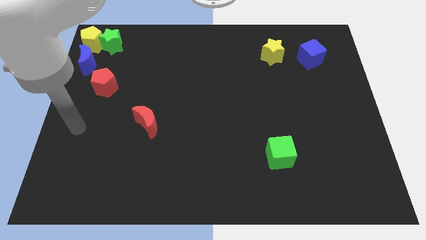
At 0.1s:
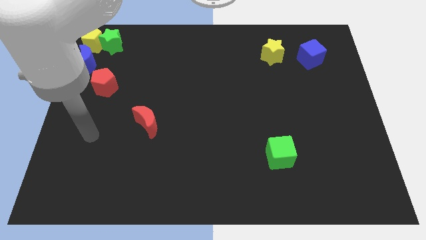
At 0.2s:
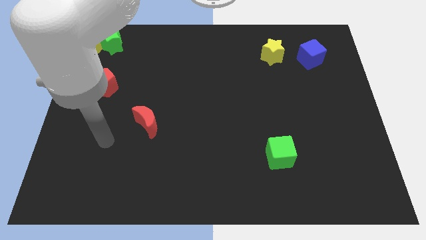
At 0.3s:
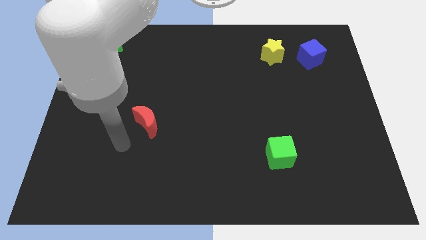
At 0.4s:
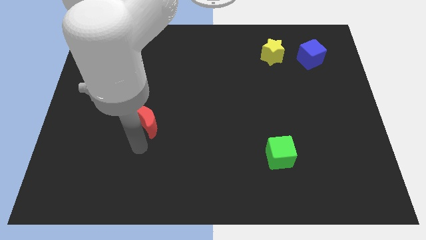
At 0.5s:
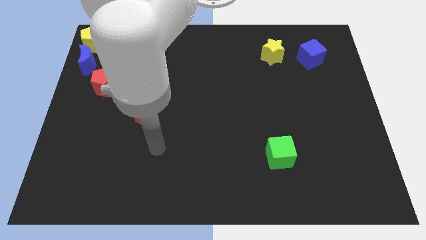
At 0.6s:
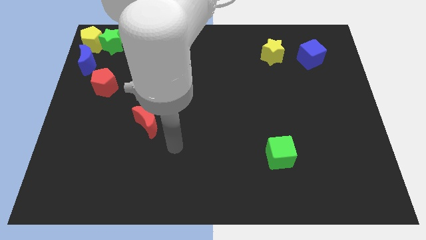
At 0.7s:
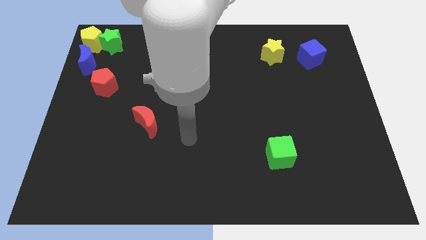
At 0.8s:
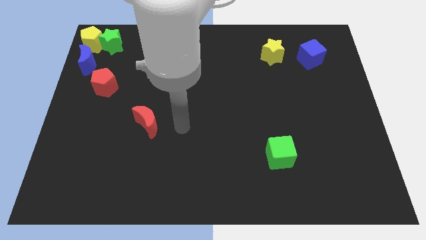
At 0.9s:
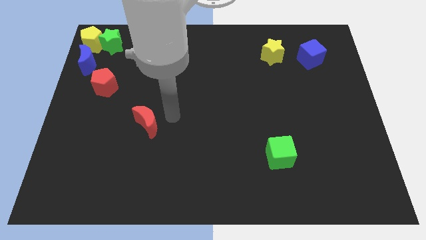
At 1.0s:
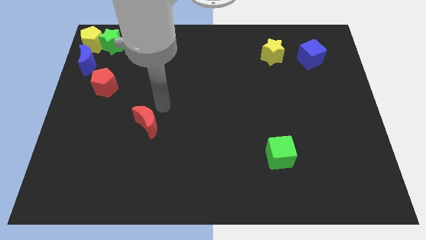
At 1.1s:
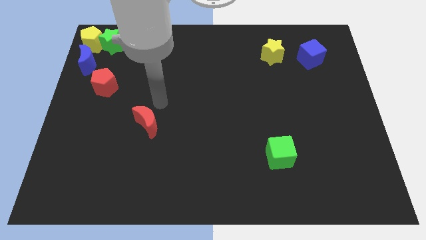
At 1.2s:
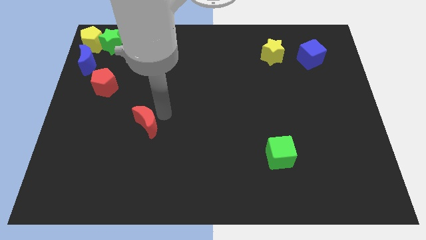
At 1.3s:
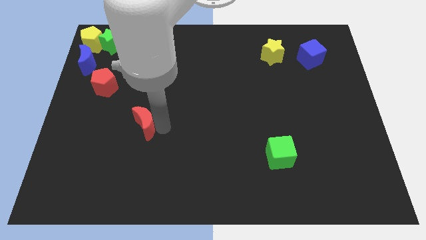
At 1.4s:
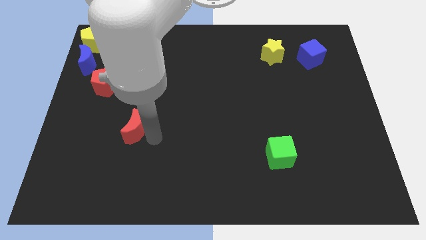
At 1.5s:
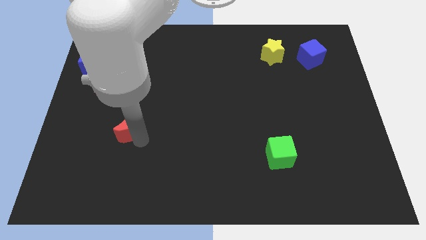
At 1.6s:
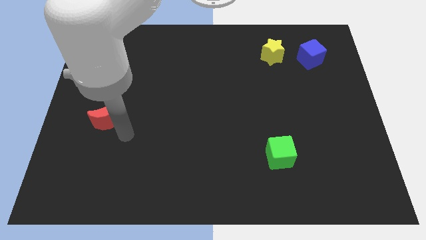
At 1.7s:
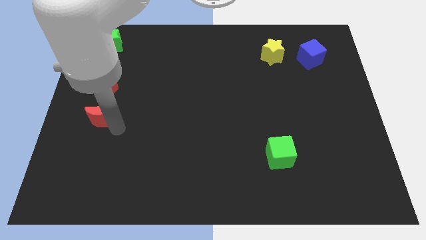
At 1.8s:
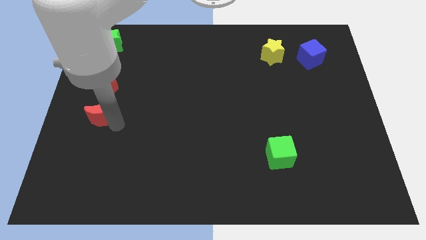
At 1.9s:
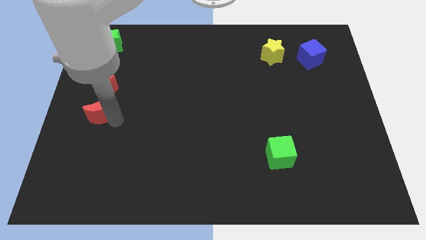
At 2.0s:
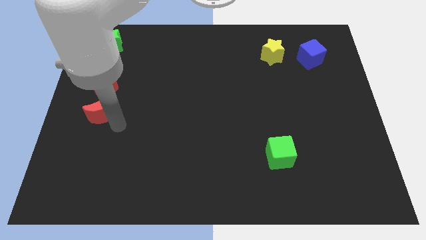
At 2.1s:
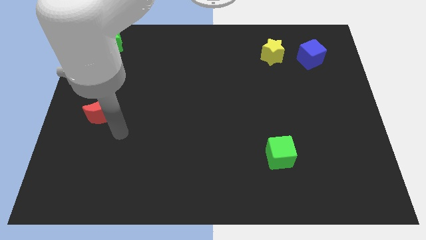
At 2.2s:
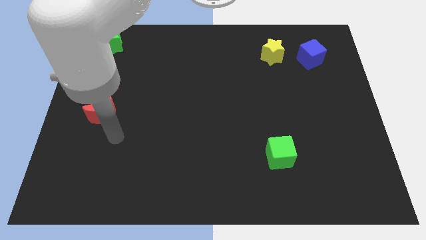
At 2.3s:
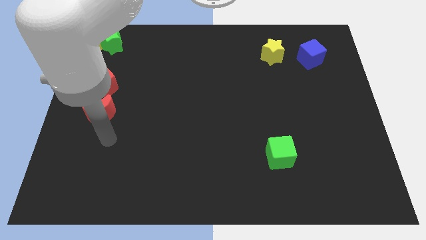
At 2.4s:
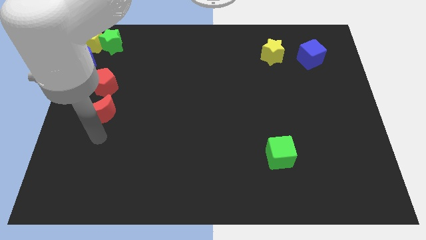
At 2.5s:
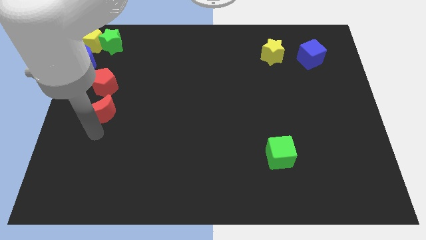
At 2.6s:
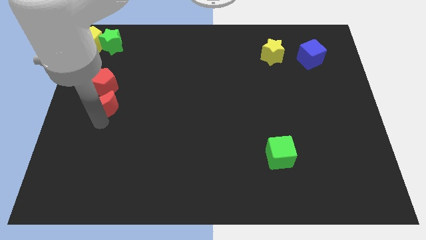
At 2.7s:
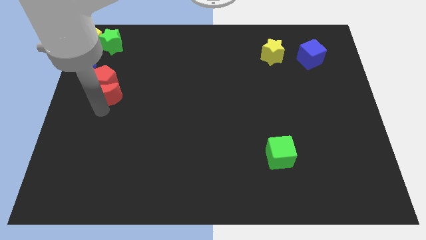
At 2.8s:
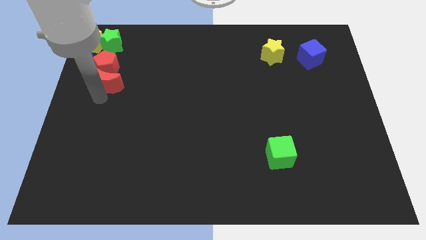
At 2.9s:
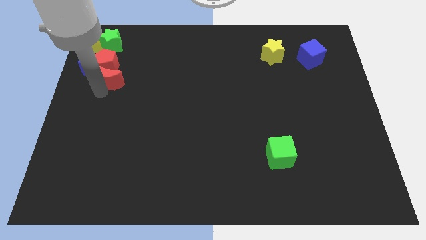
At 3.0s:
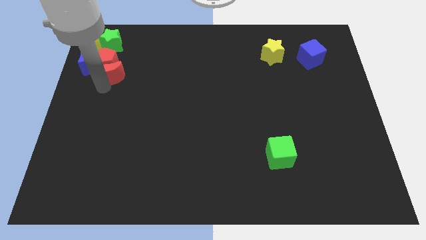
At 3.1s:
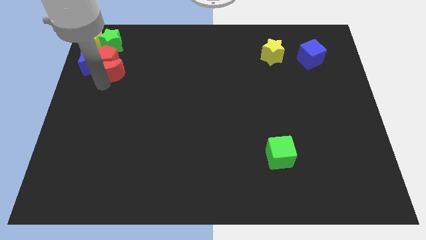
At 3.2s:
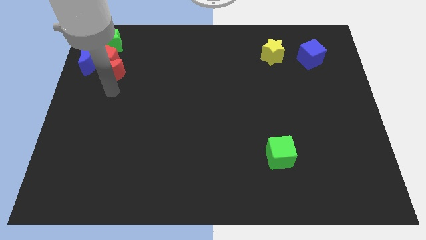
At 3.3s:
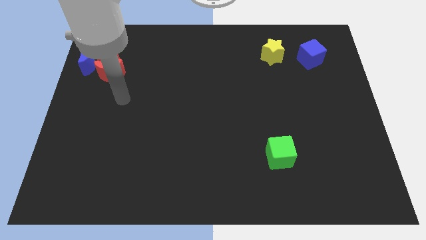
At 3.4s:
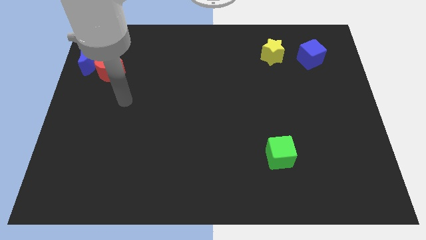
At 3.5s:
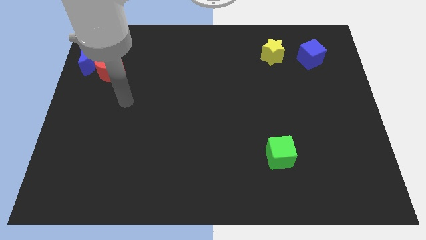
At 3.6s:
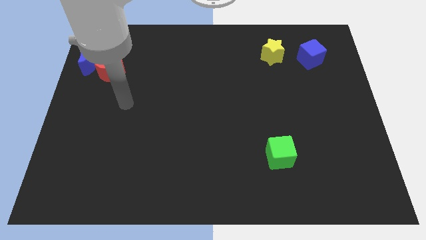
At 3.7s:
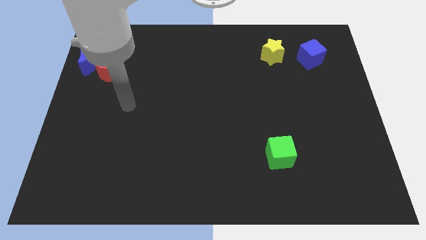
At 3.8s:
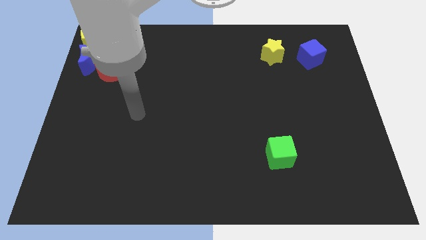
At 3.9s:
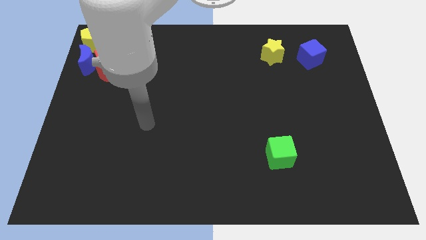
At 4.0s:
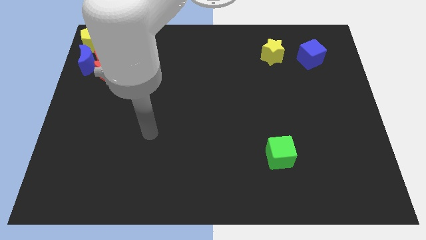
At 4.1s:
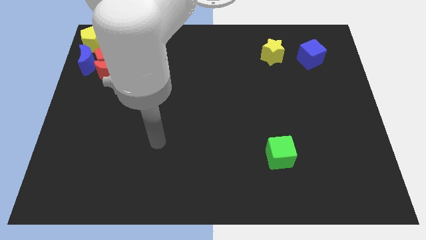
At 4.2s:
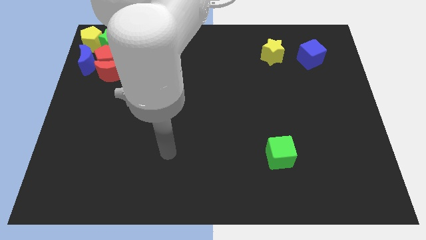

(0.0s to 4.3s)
push the red moon into the red pentagon

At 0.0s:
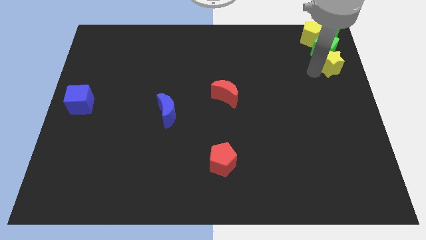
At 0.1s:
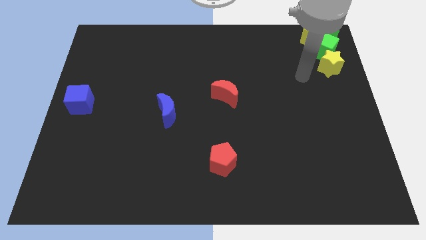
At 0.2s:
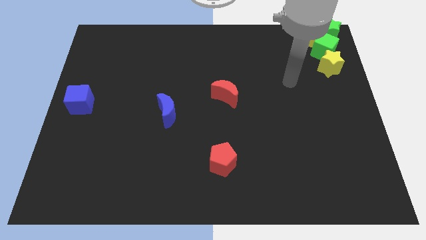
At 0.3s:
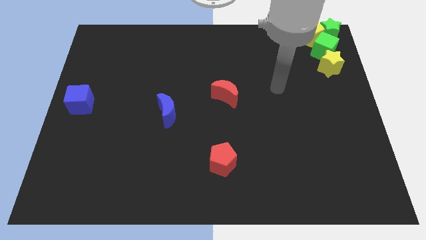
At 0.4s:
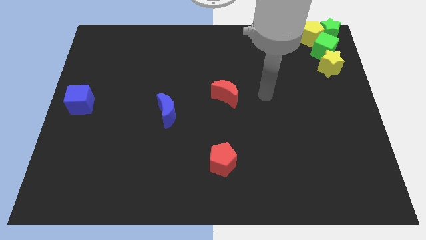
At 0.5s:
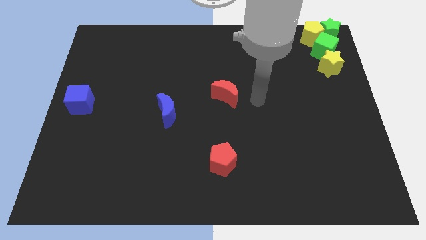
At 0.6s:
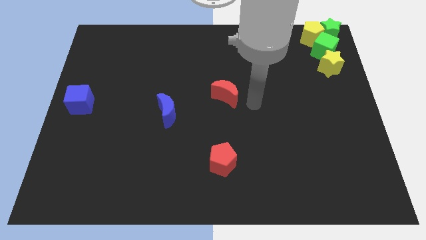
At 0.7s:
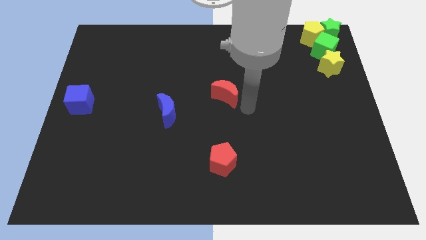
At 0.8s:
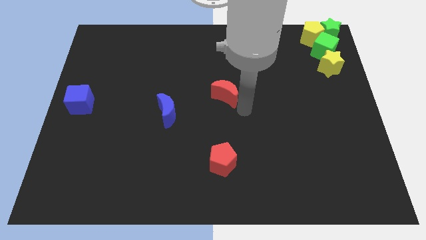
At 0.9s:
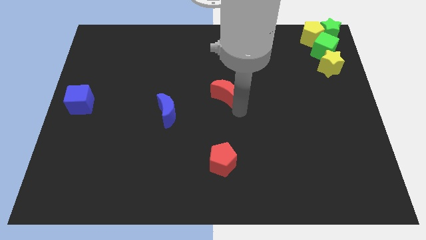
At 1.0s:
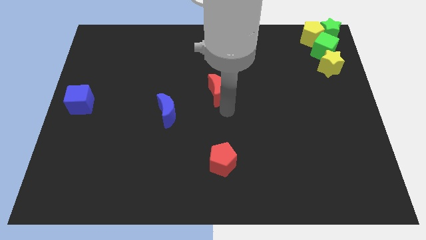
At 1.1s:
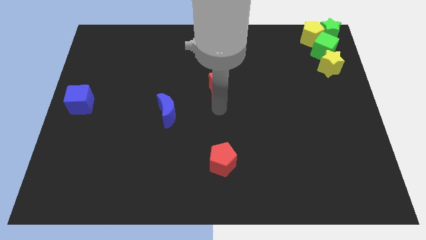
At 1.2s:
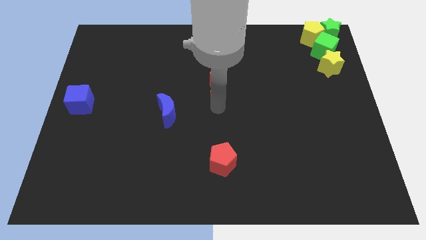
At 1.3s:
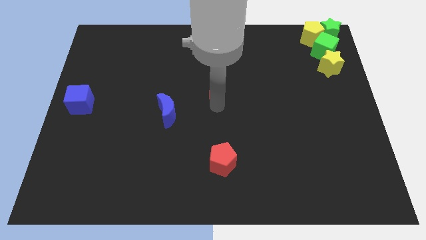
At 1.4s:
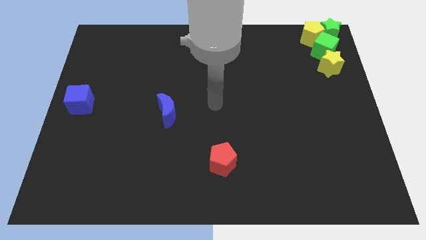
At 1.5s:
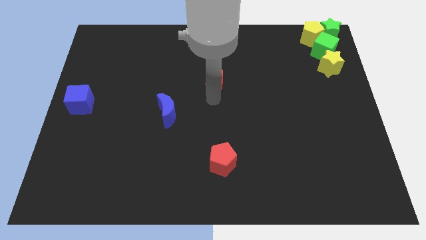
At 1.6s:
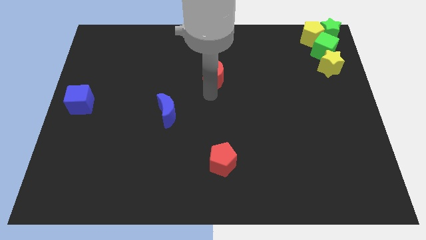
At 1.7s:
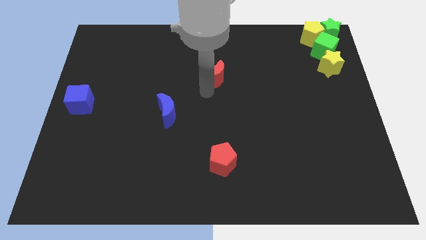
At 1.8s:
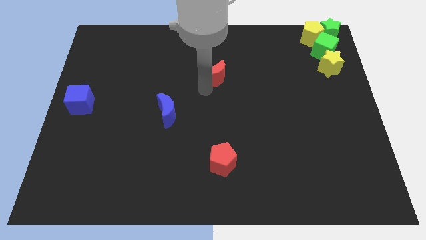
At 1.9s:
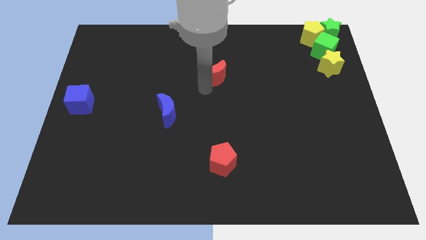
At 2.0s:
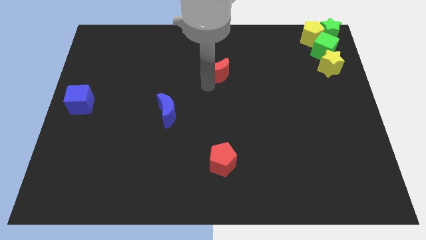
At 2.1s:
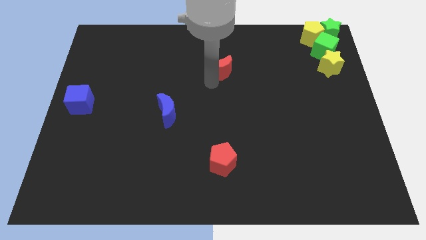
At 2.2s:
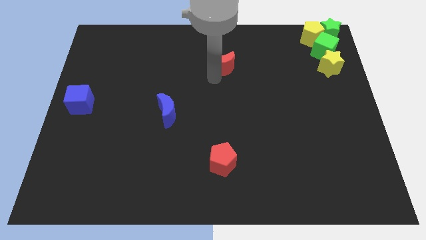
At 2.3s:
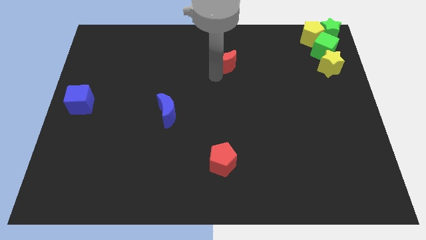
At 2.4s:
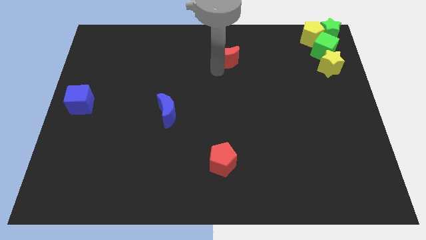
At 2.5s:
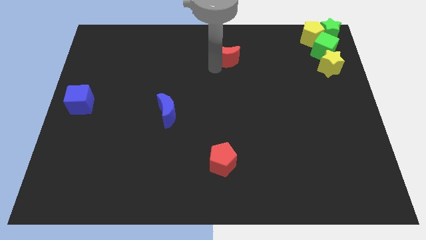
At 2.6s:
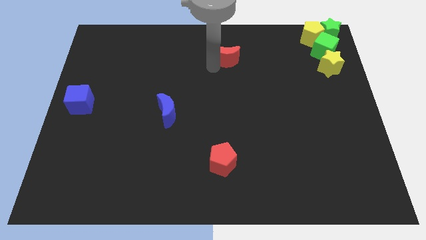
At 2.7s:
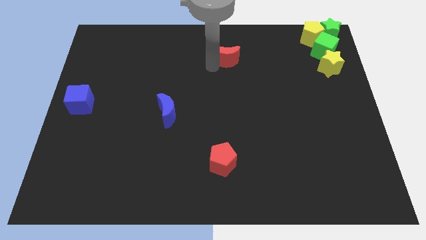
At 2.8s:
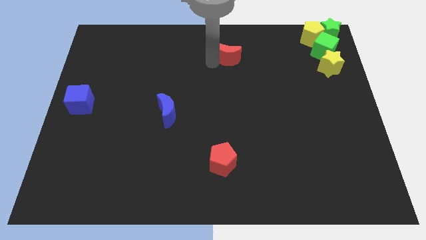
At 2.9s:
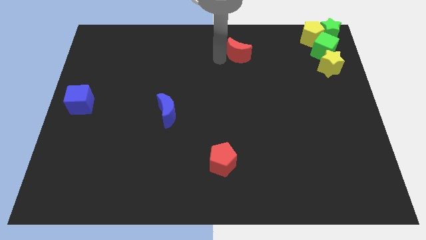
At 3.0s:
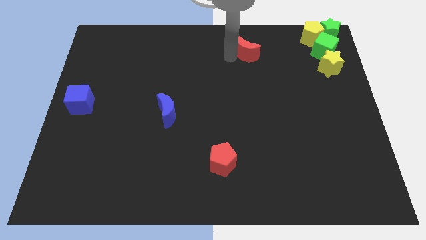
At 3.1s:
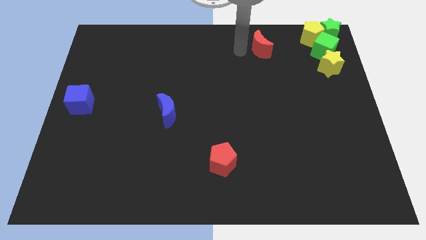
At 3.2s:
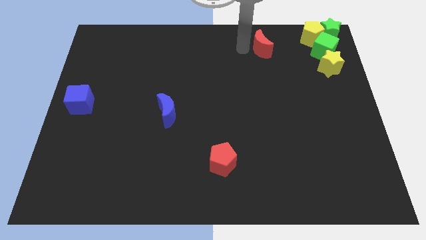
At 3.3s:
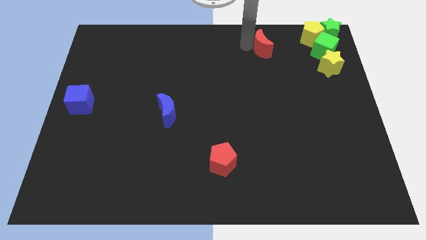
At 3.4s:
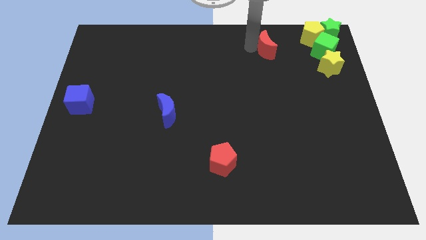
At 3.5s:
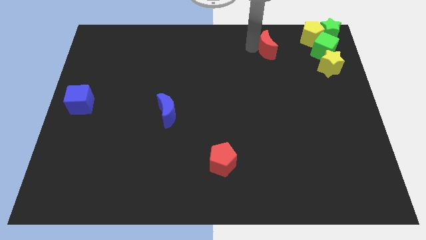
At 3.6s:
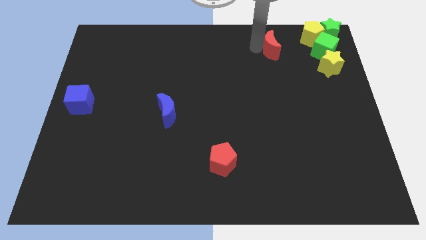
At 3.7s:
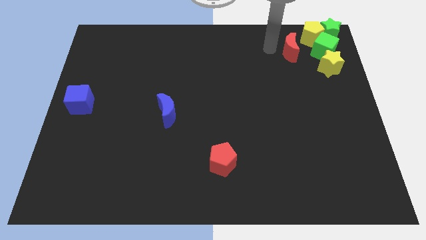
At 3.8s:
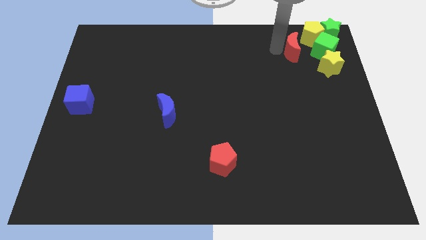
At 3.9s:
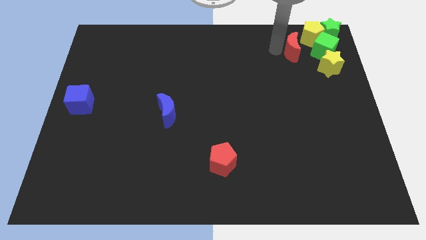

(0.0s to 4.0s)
place the red moon left to the green cube

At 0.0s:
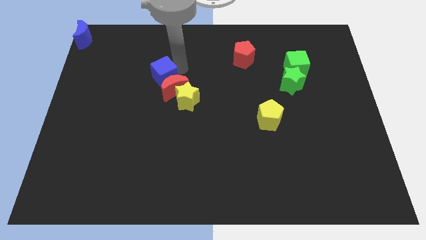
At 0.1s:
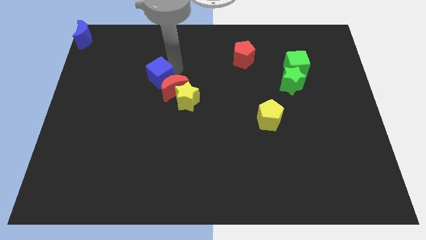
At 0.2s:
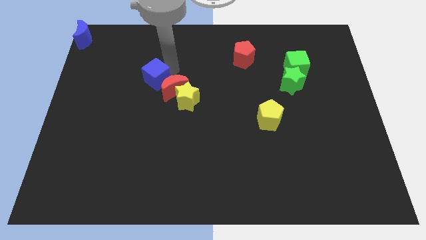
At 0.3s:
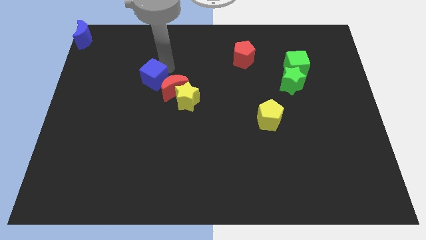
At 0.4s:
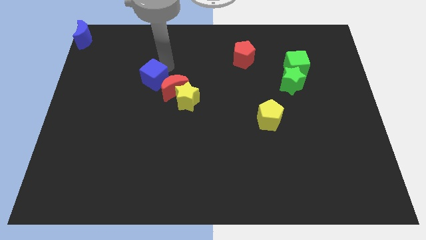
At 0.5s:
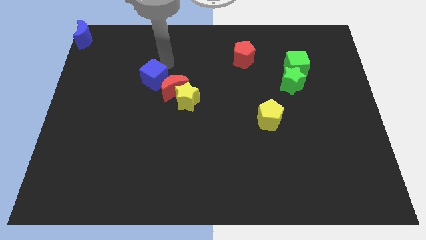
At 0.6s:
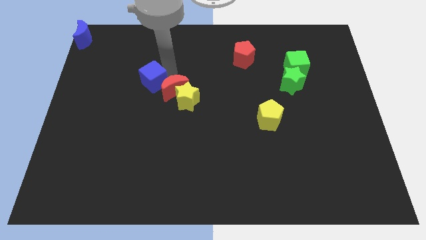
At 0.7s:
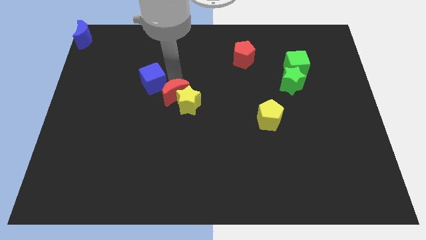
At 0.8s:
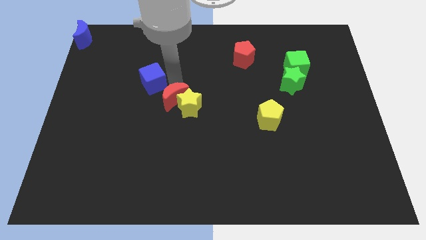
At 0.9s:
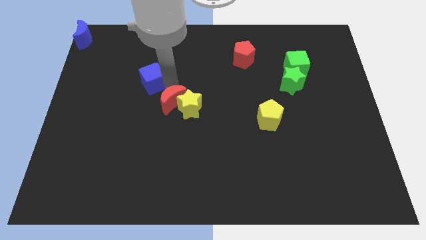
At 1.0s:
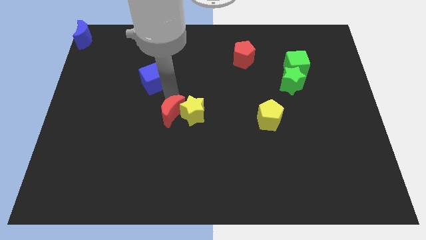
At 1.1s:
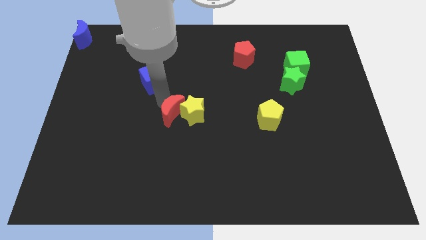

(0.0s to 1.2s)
separate the blue cube and red moon
